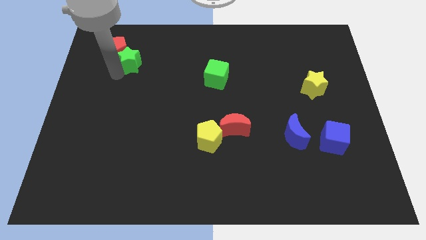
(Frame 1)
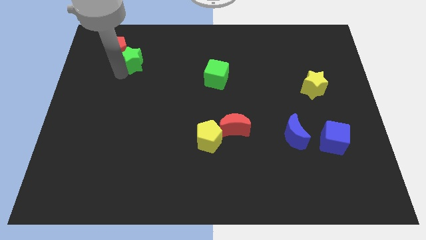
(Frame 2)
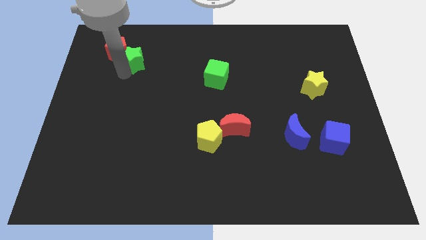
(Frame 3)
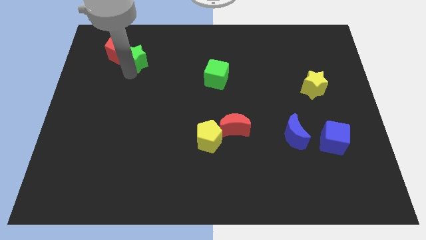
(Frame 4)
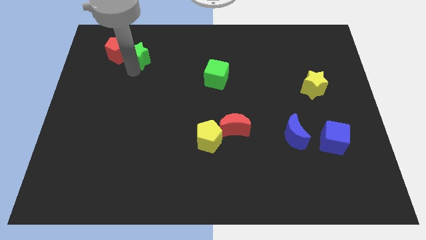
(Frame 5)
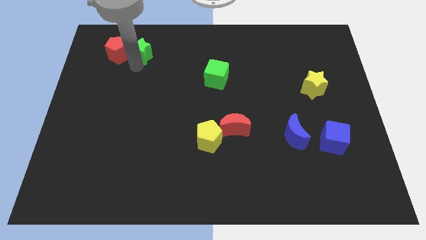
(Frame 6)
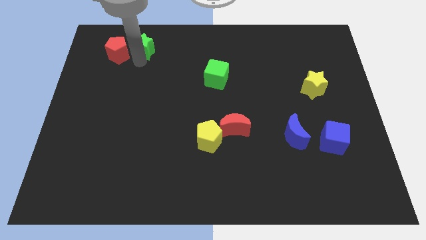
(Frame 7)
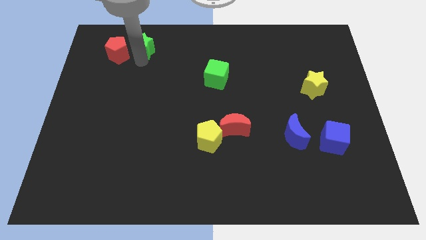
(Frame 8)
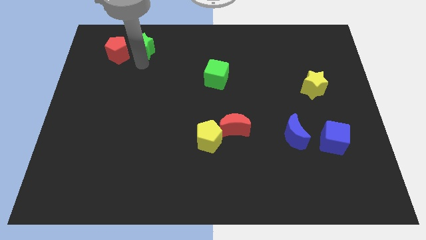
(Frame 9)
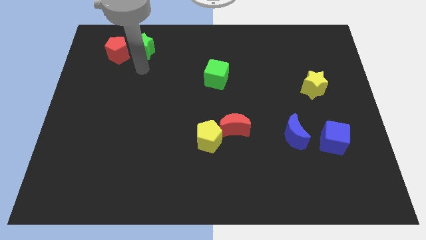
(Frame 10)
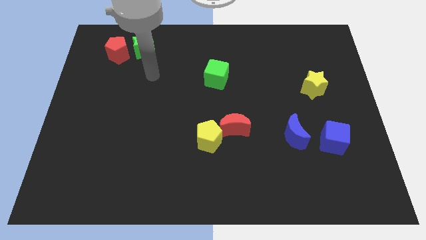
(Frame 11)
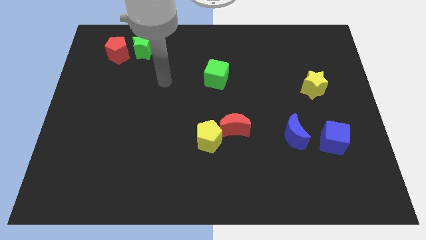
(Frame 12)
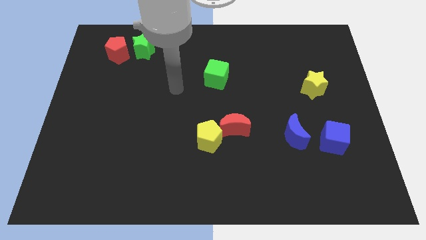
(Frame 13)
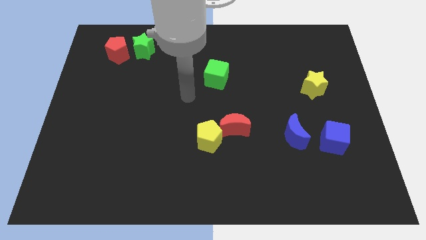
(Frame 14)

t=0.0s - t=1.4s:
separate the green star from the red pentagon

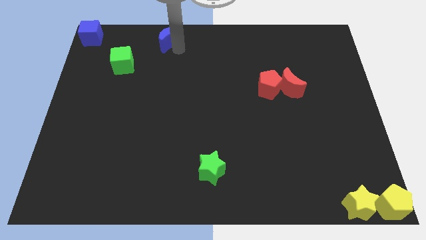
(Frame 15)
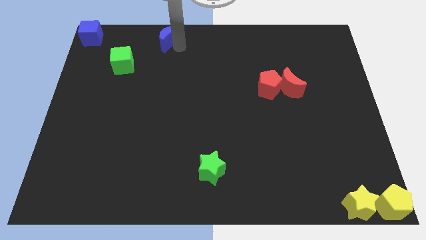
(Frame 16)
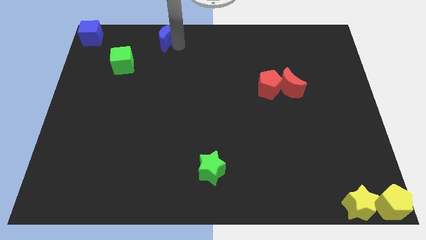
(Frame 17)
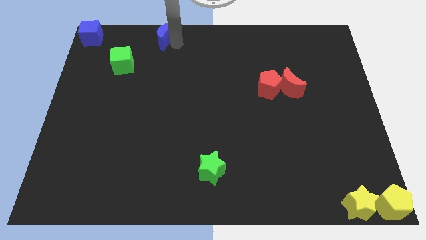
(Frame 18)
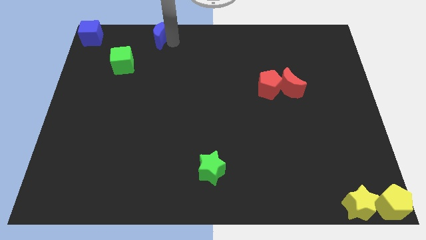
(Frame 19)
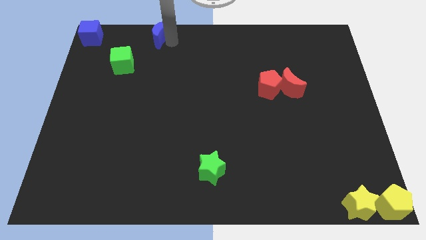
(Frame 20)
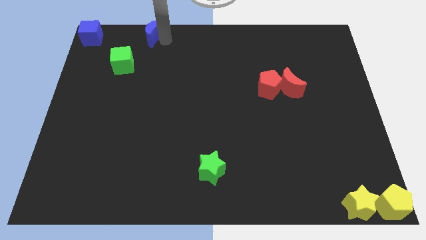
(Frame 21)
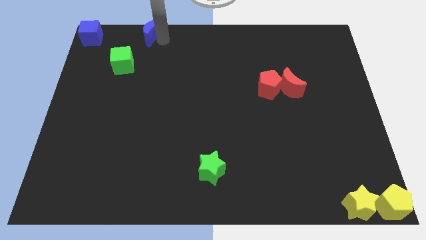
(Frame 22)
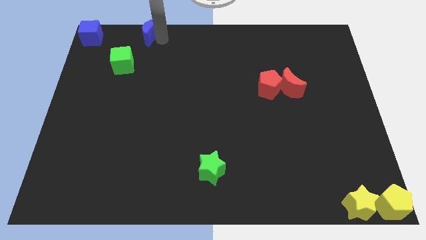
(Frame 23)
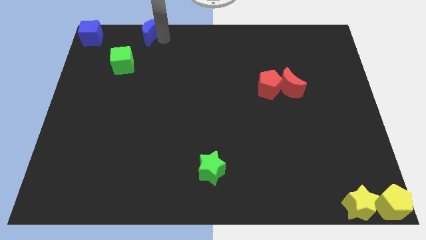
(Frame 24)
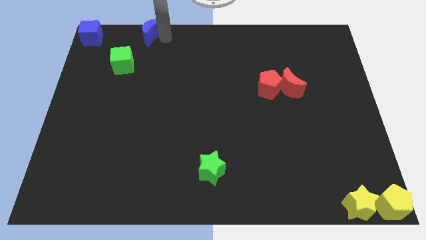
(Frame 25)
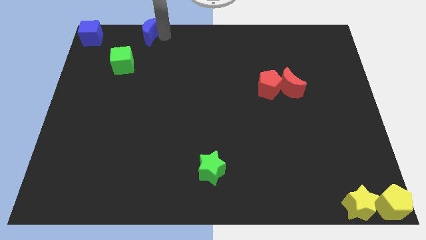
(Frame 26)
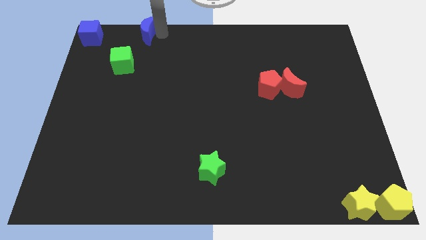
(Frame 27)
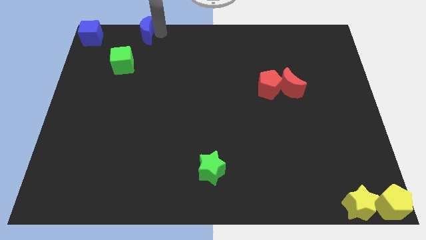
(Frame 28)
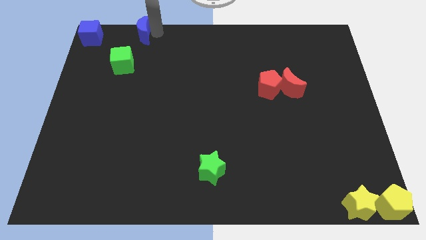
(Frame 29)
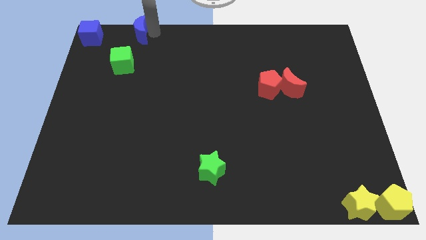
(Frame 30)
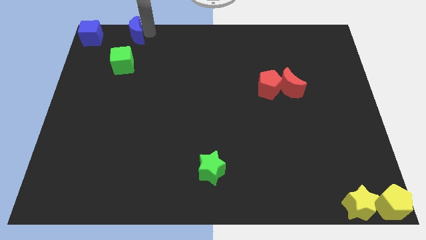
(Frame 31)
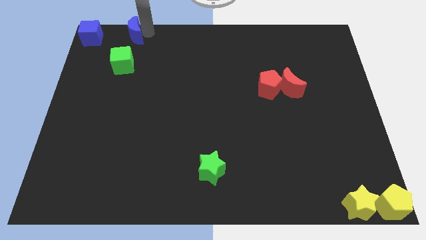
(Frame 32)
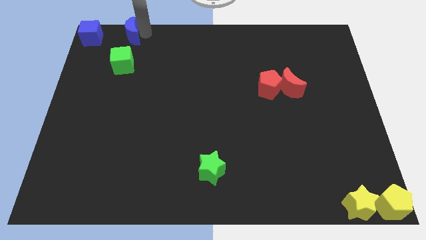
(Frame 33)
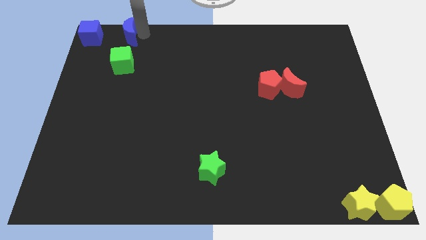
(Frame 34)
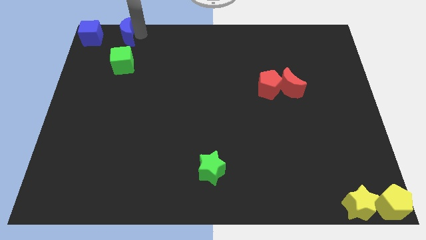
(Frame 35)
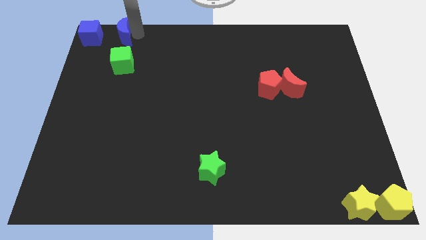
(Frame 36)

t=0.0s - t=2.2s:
place the blue moon at the top of the green cube

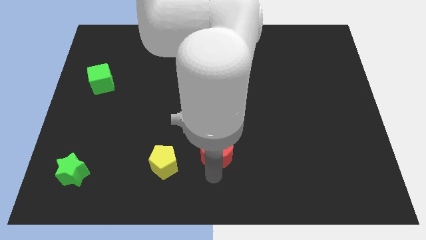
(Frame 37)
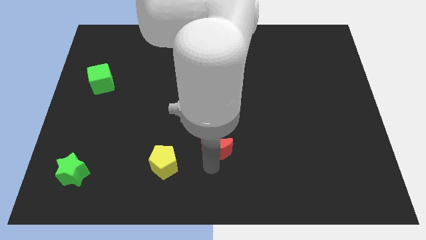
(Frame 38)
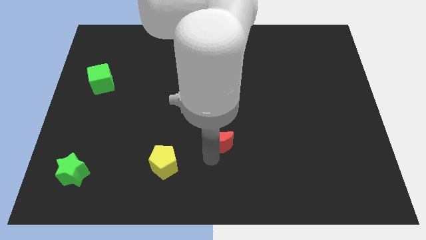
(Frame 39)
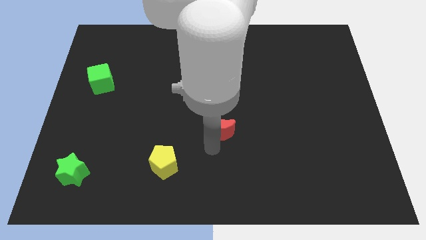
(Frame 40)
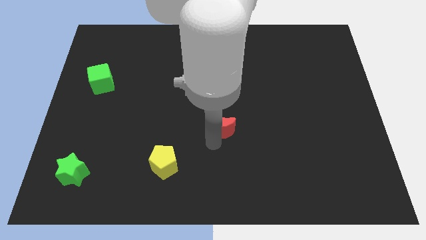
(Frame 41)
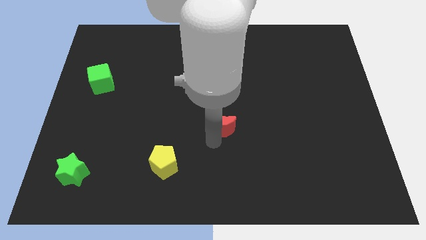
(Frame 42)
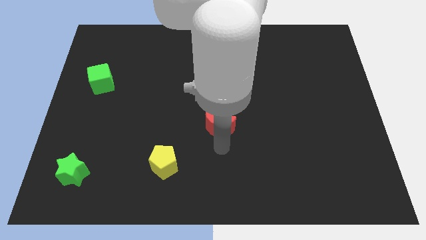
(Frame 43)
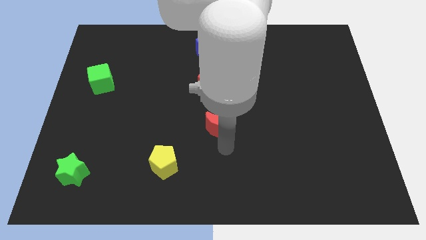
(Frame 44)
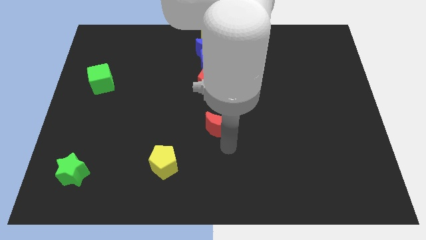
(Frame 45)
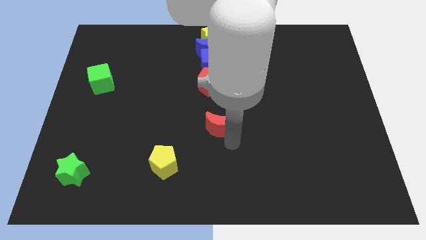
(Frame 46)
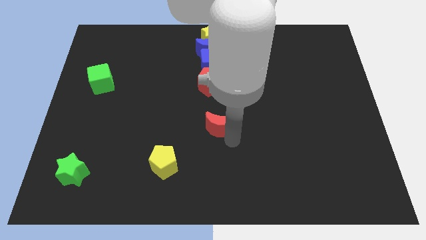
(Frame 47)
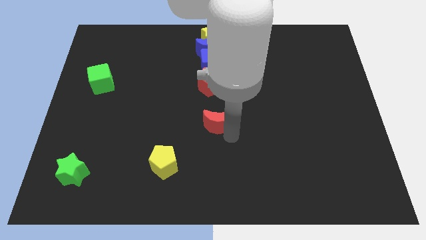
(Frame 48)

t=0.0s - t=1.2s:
push the red crescent slightly towards the red pentagon

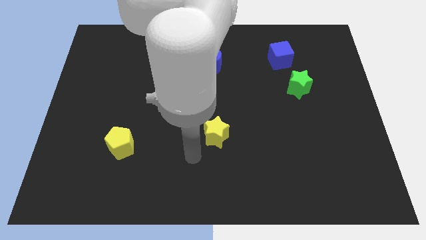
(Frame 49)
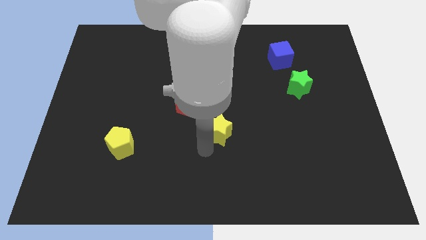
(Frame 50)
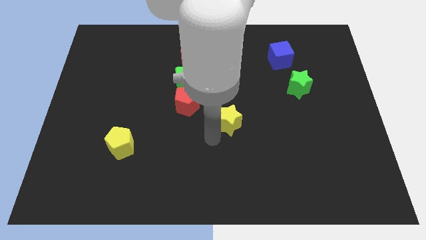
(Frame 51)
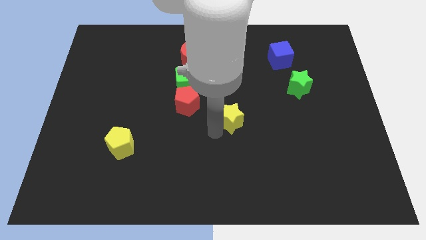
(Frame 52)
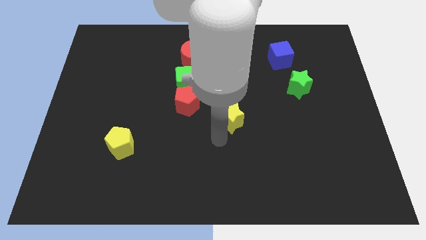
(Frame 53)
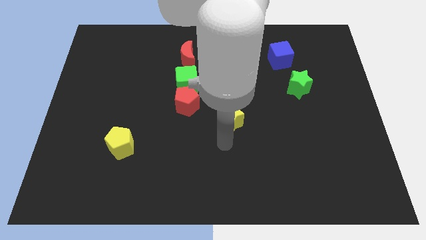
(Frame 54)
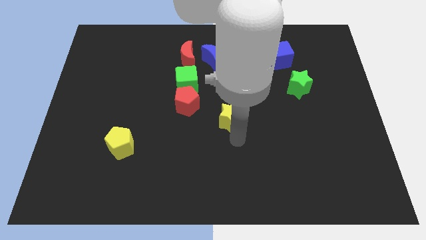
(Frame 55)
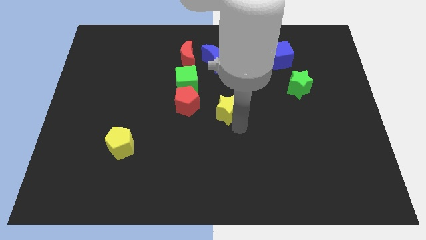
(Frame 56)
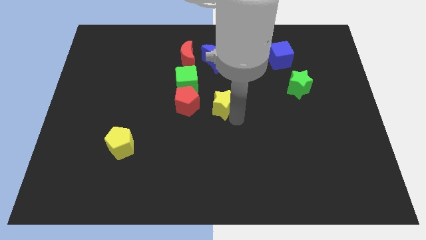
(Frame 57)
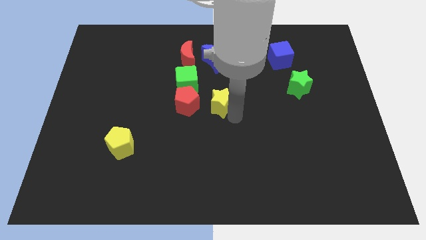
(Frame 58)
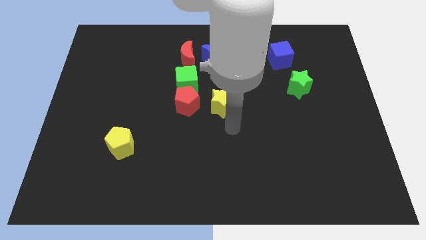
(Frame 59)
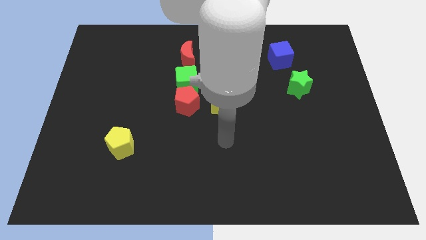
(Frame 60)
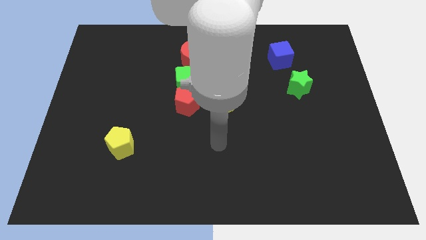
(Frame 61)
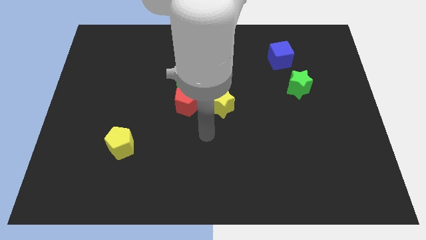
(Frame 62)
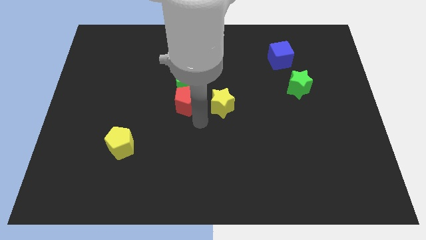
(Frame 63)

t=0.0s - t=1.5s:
move the yellow star to the center of the board

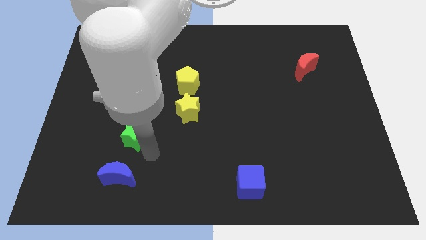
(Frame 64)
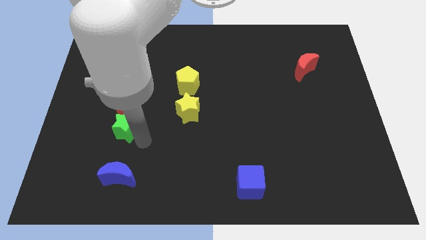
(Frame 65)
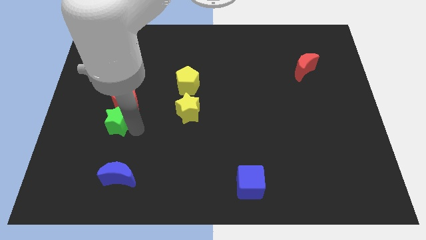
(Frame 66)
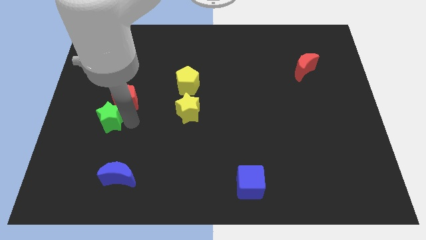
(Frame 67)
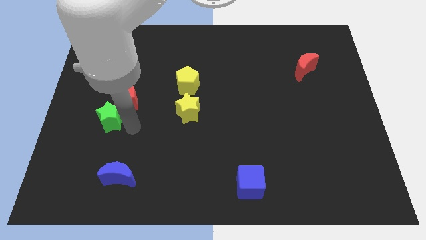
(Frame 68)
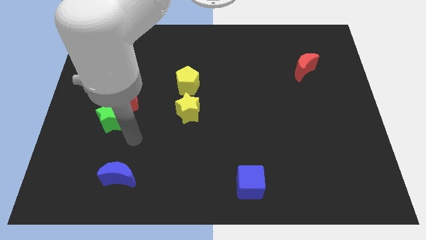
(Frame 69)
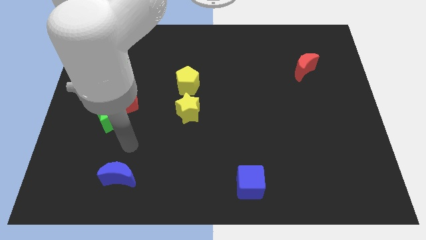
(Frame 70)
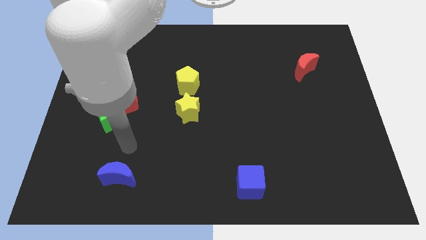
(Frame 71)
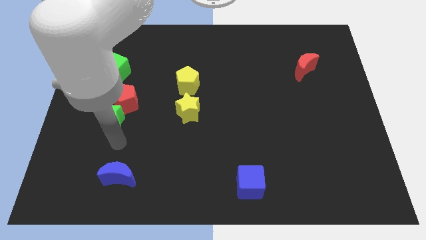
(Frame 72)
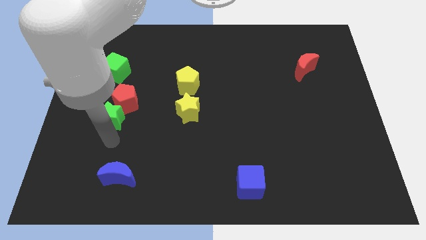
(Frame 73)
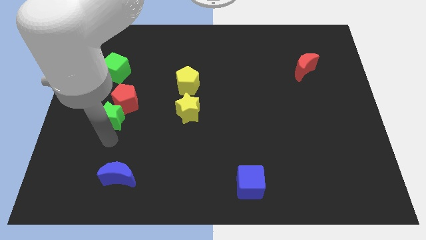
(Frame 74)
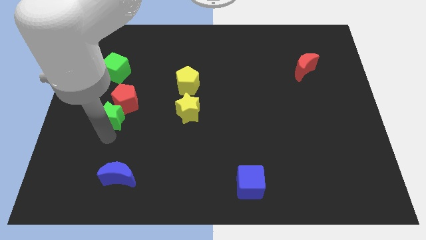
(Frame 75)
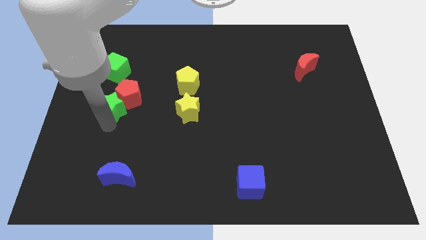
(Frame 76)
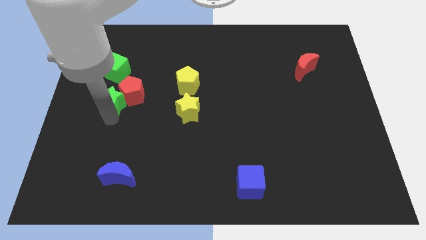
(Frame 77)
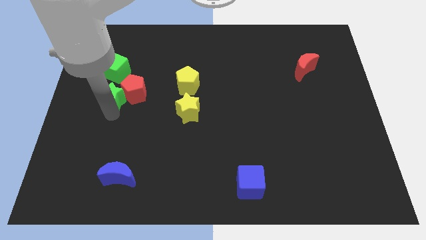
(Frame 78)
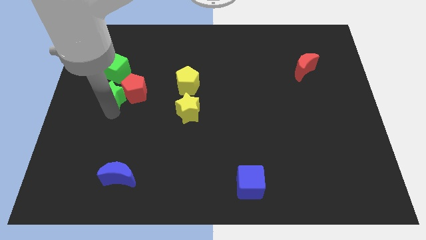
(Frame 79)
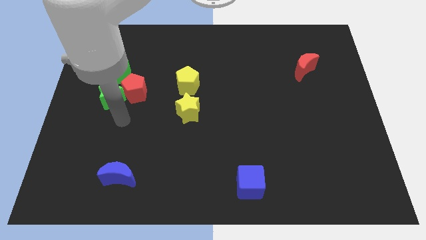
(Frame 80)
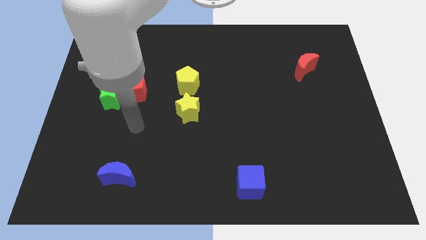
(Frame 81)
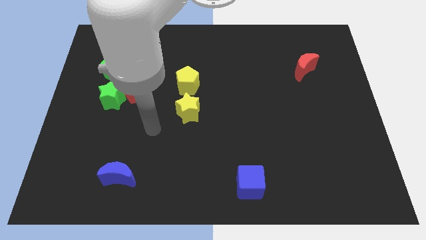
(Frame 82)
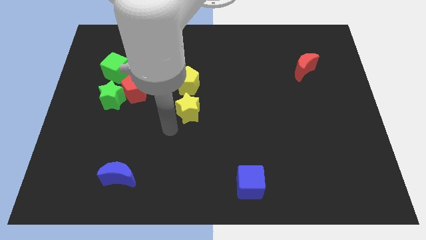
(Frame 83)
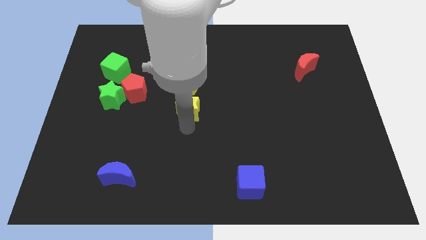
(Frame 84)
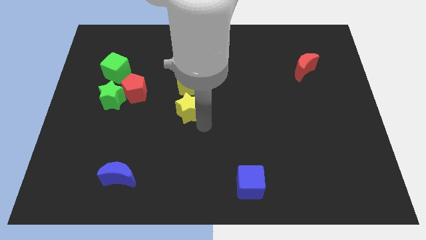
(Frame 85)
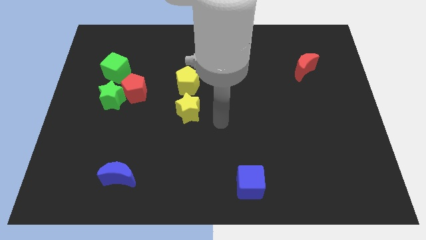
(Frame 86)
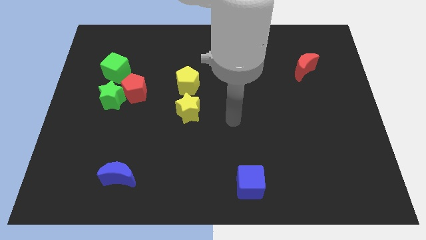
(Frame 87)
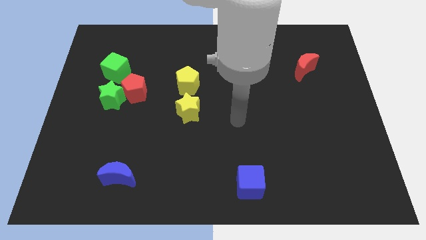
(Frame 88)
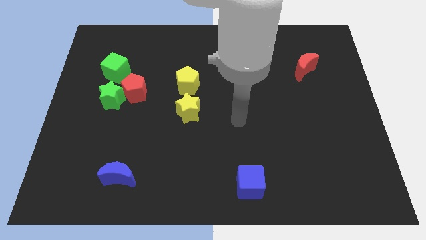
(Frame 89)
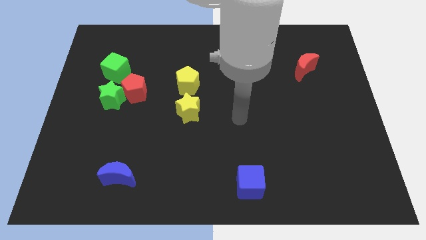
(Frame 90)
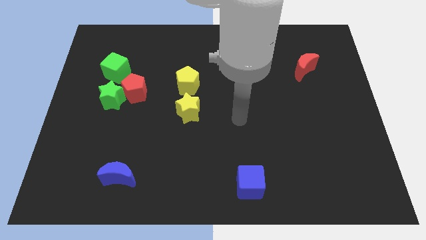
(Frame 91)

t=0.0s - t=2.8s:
push the green star and red pentagon upward
